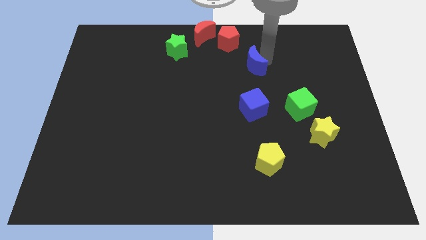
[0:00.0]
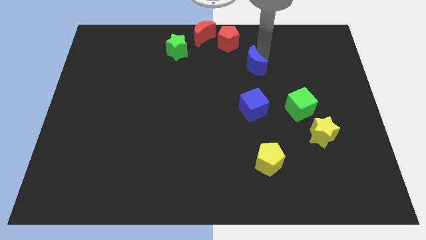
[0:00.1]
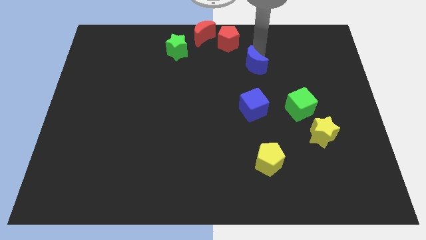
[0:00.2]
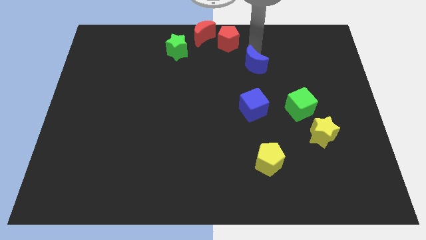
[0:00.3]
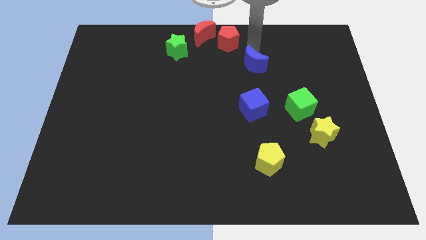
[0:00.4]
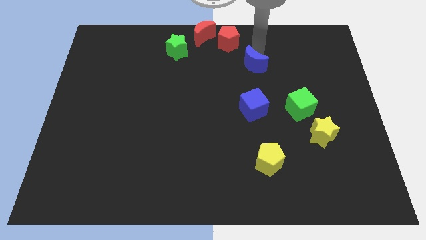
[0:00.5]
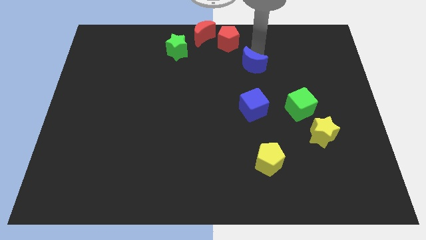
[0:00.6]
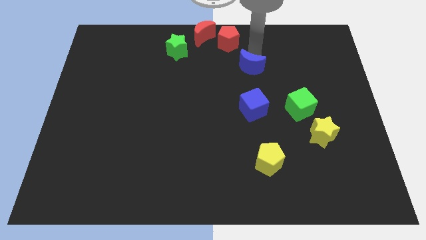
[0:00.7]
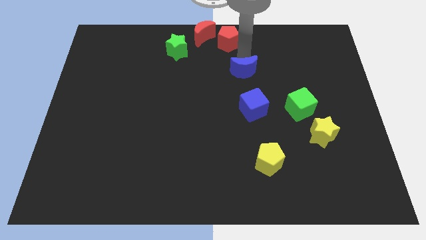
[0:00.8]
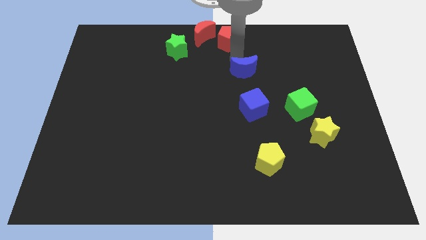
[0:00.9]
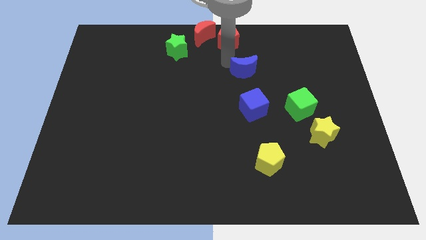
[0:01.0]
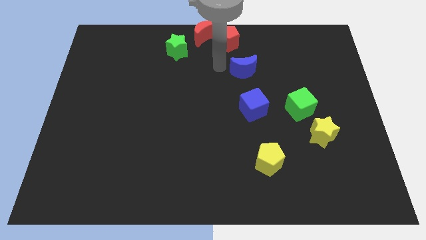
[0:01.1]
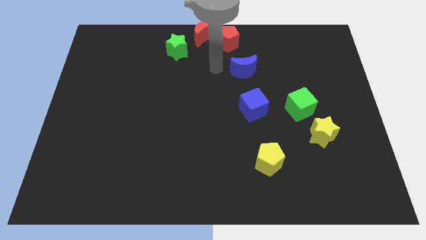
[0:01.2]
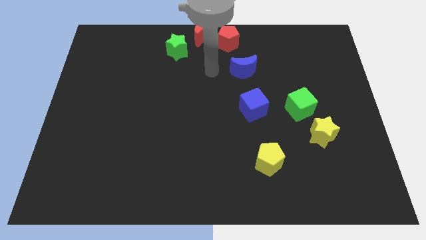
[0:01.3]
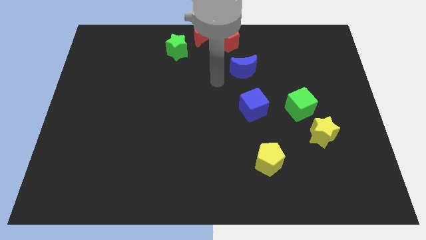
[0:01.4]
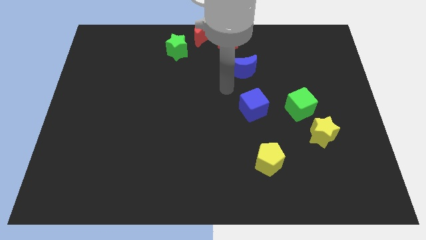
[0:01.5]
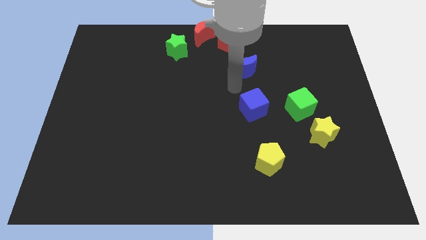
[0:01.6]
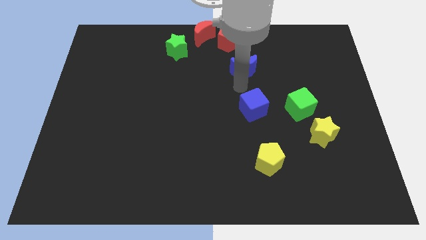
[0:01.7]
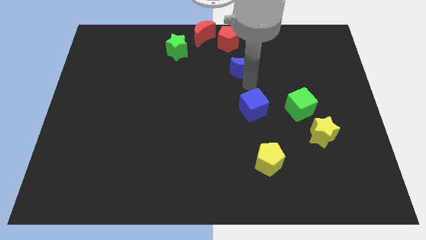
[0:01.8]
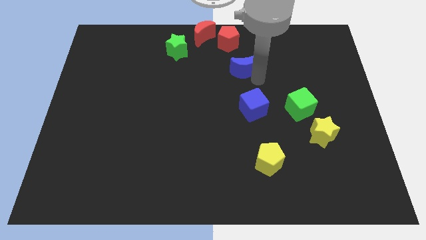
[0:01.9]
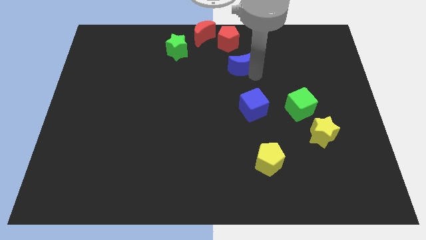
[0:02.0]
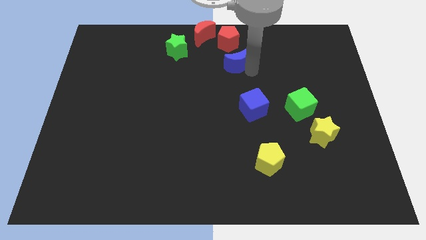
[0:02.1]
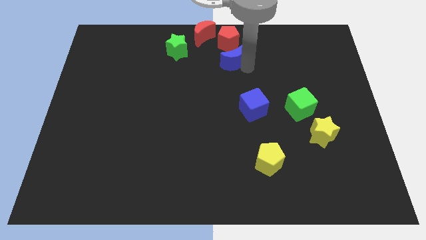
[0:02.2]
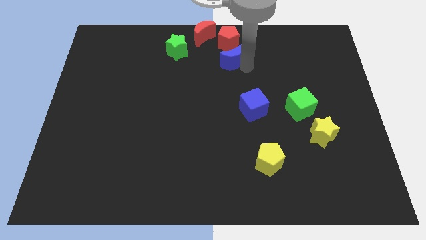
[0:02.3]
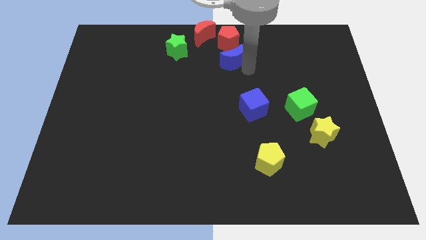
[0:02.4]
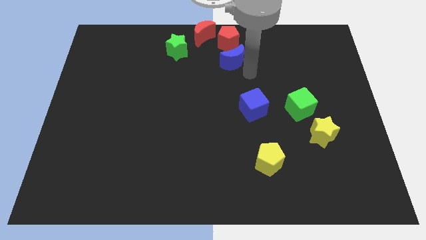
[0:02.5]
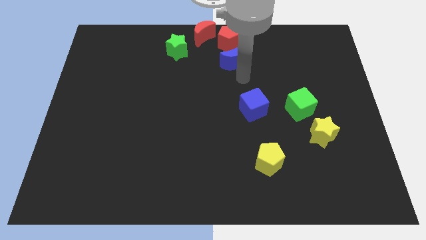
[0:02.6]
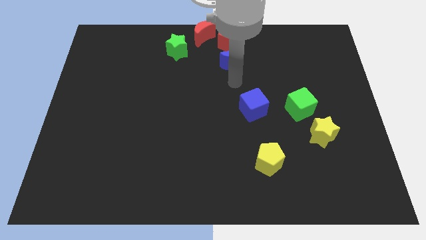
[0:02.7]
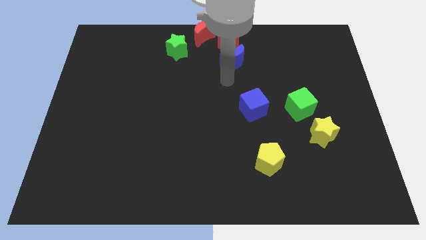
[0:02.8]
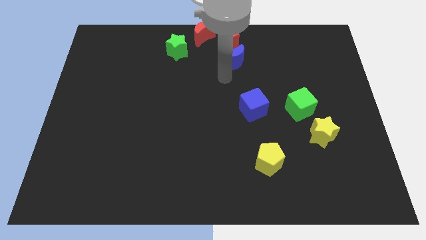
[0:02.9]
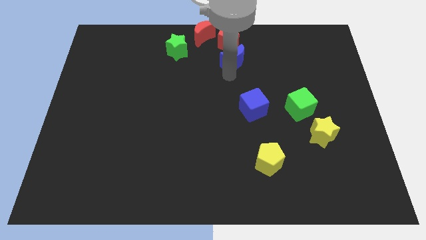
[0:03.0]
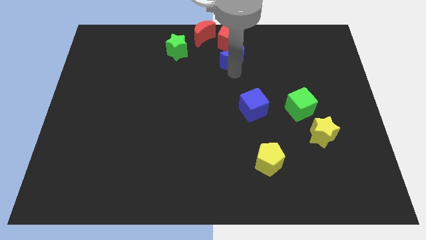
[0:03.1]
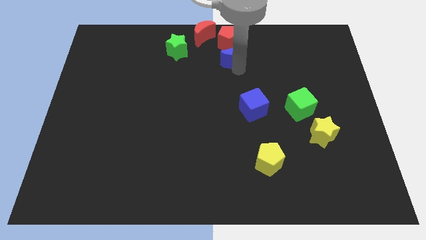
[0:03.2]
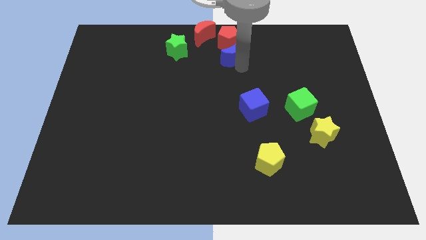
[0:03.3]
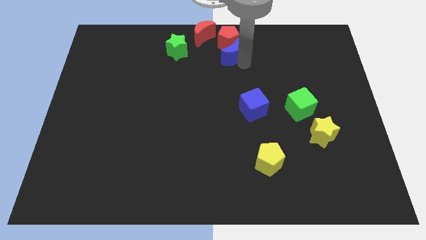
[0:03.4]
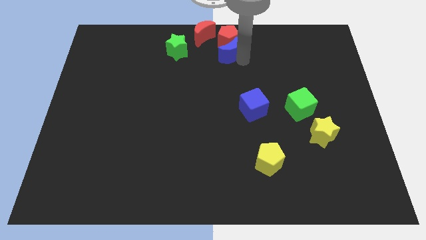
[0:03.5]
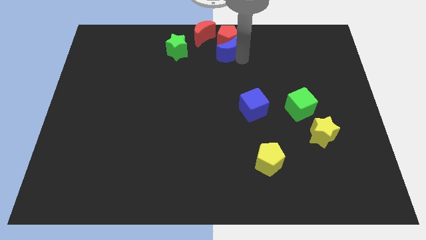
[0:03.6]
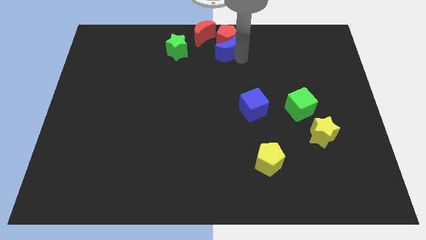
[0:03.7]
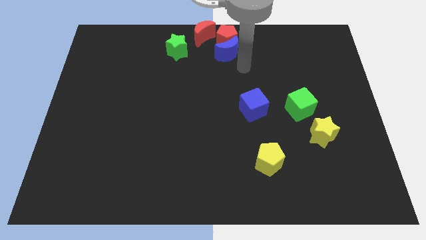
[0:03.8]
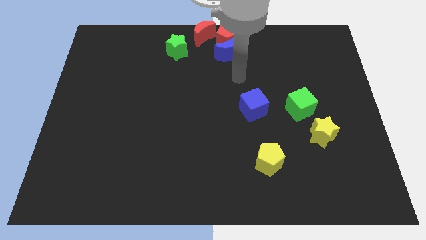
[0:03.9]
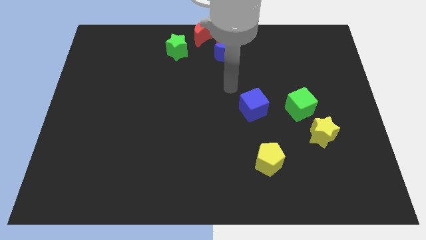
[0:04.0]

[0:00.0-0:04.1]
push the blue moon into the red pentagon

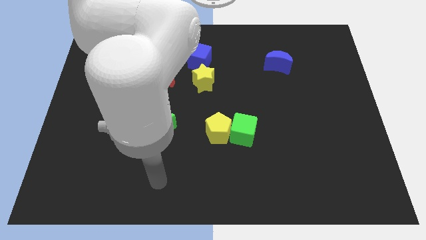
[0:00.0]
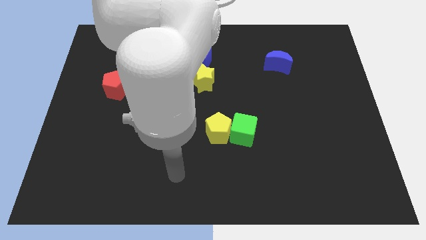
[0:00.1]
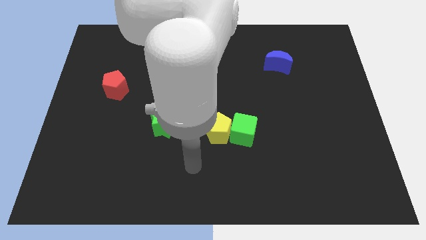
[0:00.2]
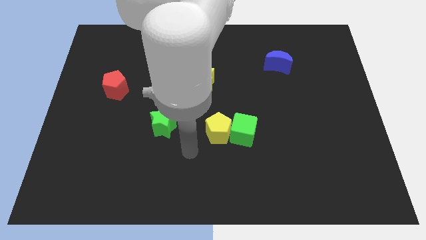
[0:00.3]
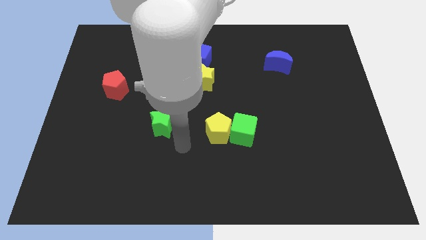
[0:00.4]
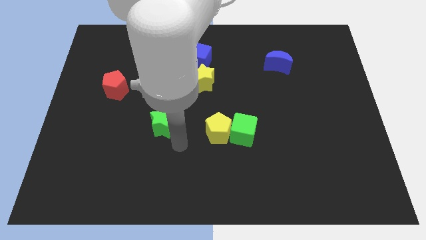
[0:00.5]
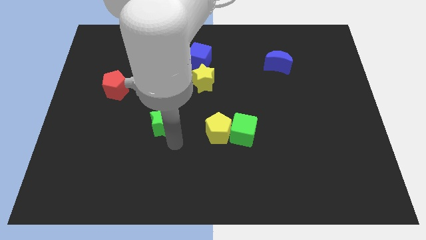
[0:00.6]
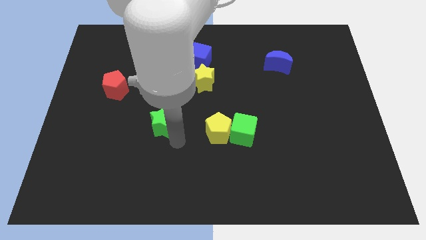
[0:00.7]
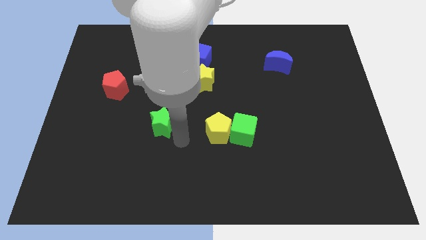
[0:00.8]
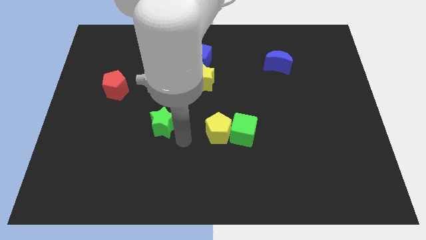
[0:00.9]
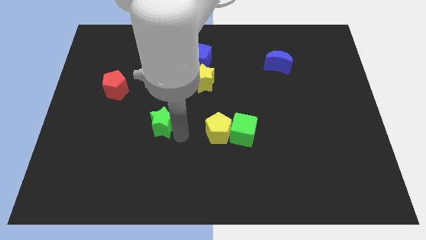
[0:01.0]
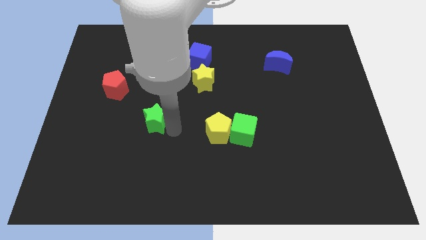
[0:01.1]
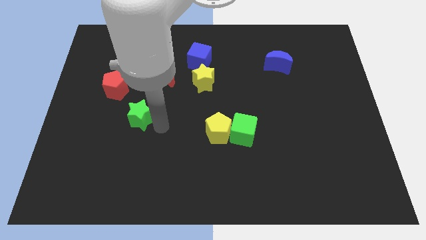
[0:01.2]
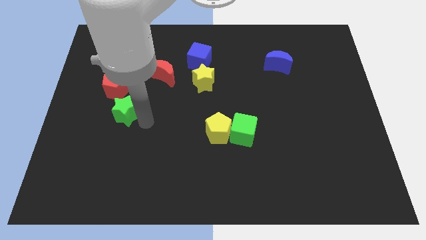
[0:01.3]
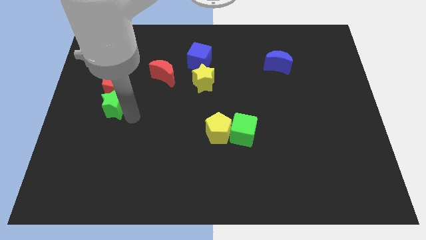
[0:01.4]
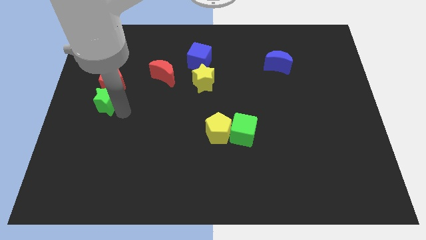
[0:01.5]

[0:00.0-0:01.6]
place the green star below the red pentagon

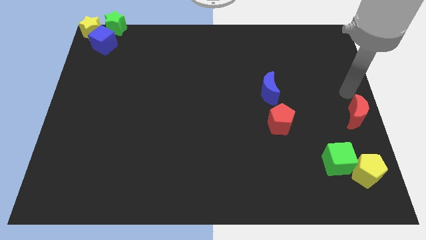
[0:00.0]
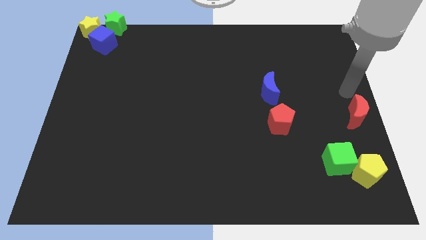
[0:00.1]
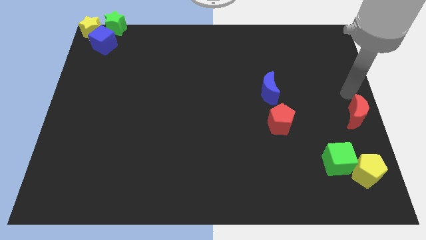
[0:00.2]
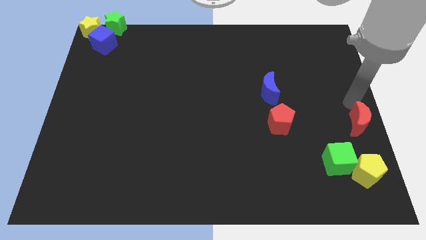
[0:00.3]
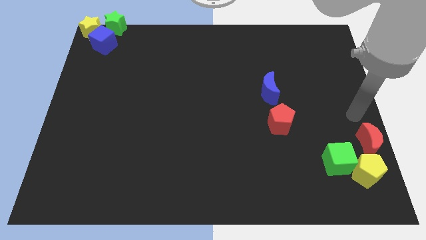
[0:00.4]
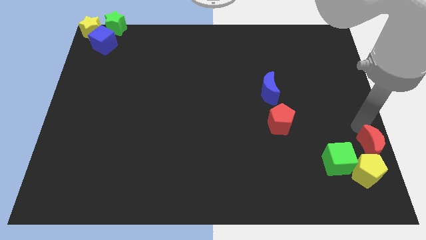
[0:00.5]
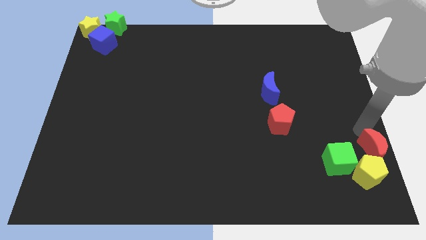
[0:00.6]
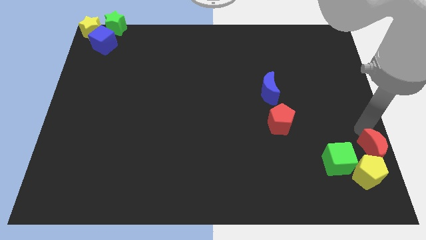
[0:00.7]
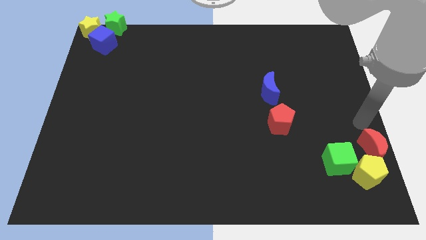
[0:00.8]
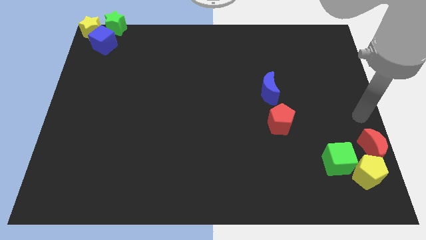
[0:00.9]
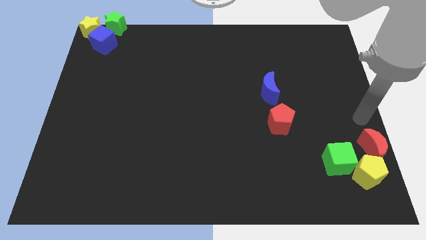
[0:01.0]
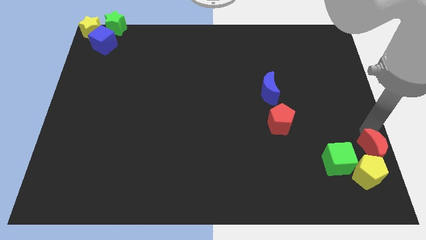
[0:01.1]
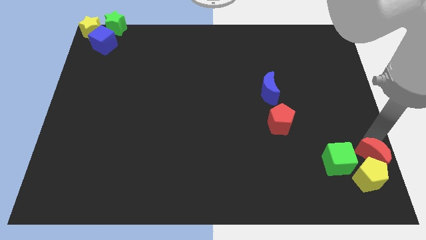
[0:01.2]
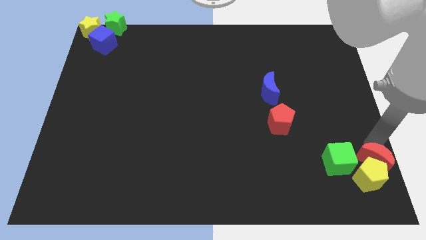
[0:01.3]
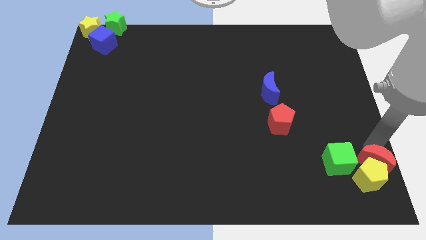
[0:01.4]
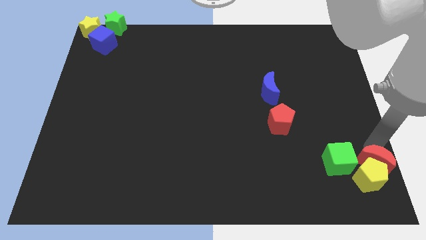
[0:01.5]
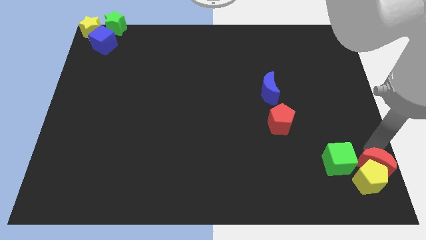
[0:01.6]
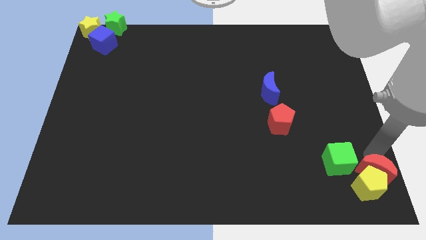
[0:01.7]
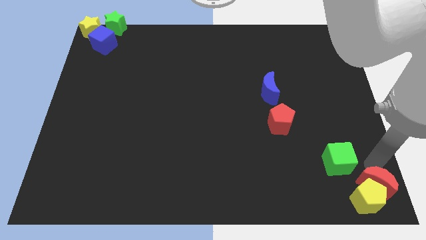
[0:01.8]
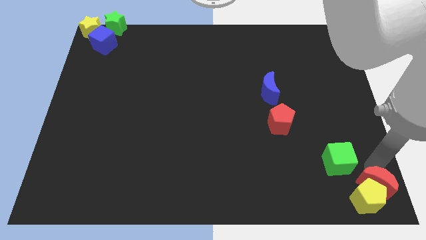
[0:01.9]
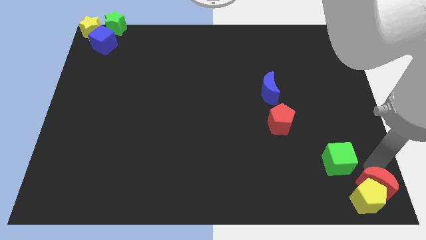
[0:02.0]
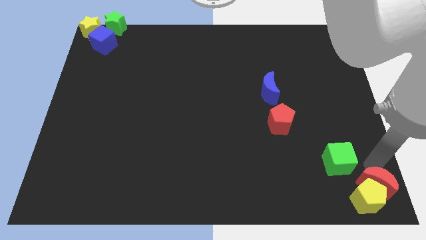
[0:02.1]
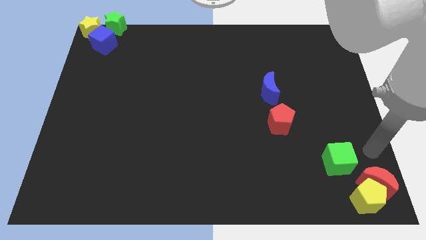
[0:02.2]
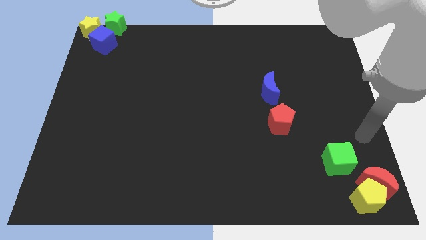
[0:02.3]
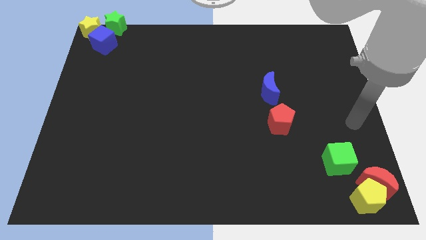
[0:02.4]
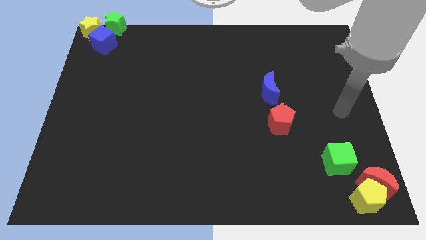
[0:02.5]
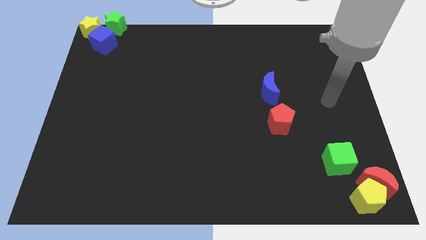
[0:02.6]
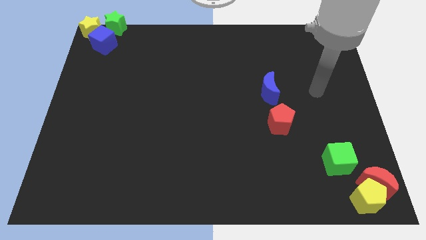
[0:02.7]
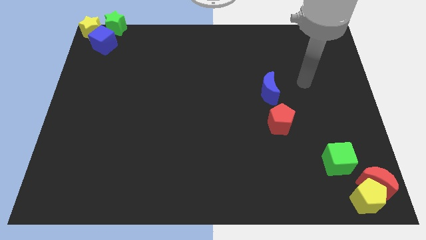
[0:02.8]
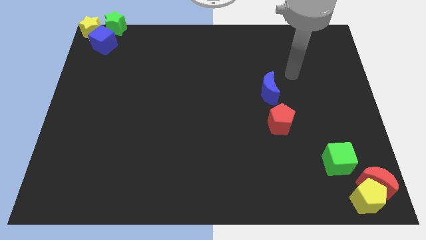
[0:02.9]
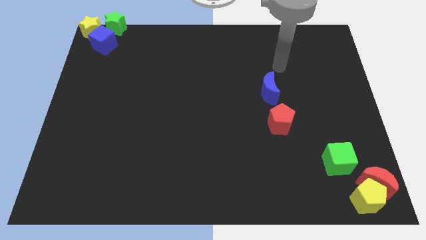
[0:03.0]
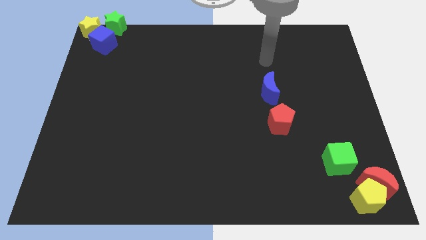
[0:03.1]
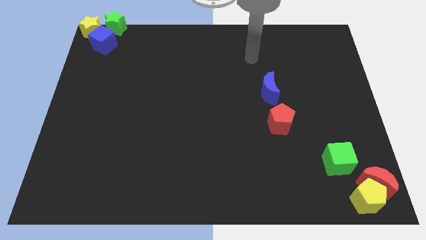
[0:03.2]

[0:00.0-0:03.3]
put the red moon and yellow pentagon to the bottom right corner of the board
